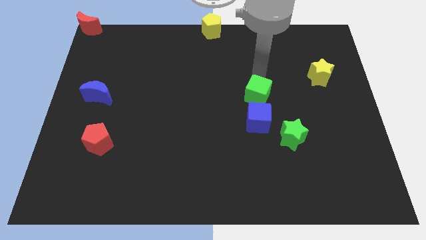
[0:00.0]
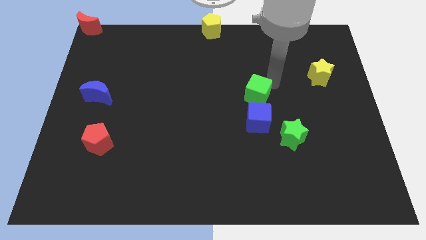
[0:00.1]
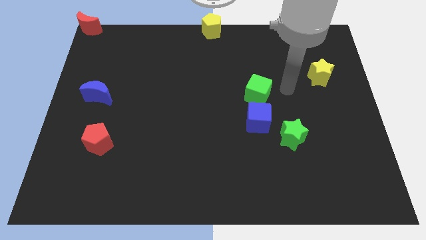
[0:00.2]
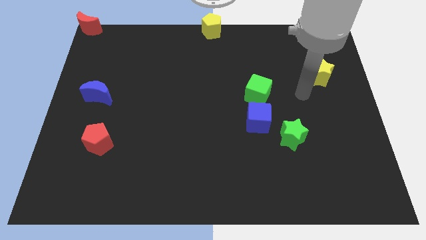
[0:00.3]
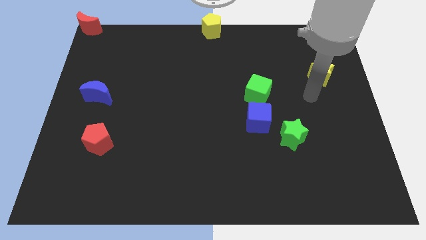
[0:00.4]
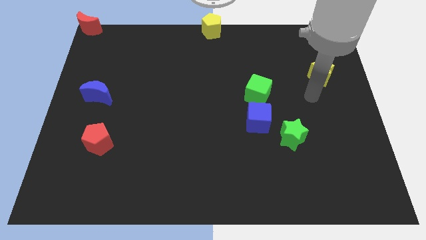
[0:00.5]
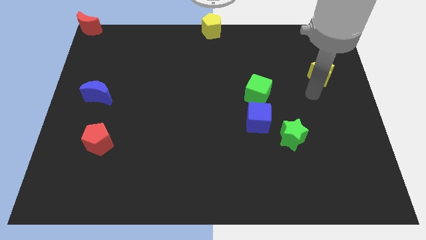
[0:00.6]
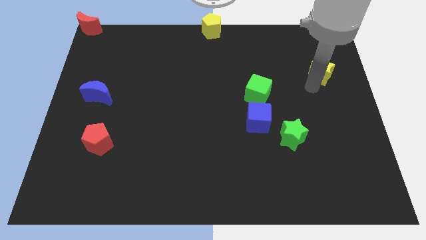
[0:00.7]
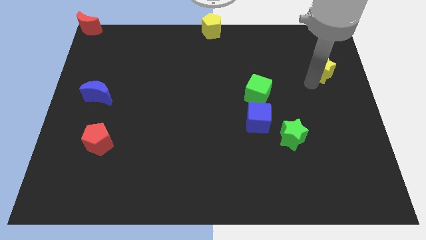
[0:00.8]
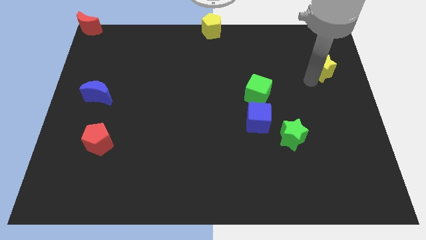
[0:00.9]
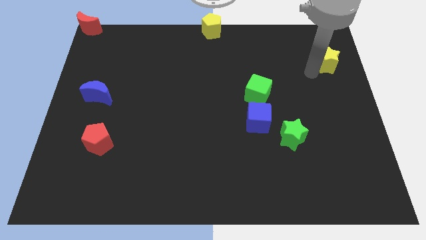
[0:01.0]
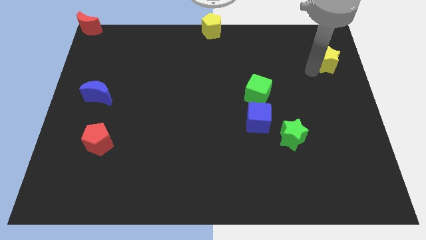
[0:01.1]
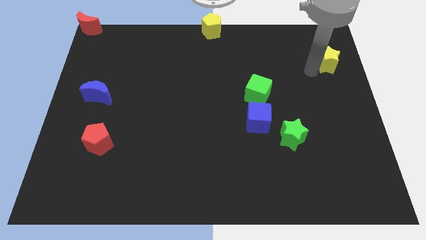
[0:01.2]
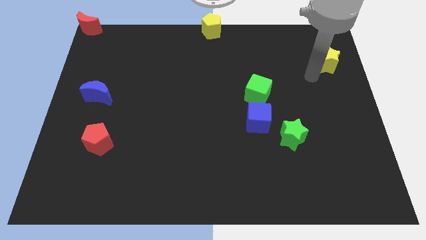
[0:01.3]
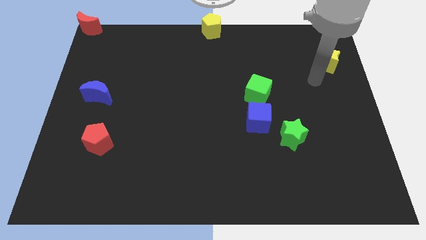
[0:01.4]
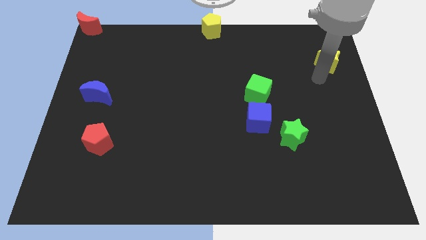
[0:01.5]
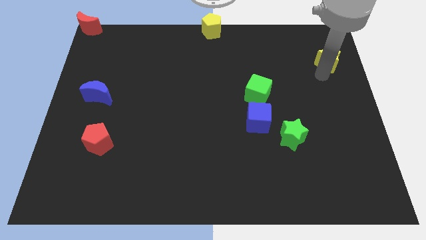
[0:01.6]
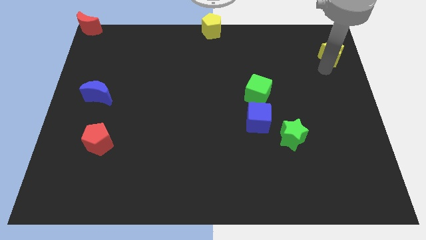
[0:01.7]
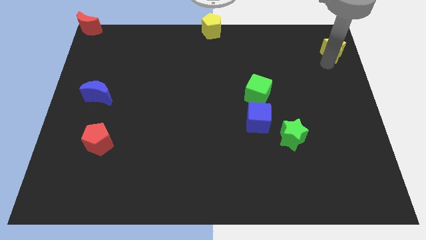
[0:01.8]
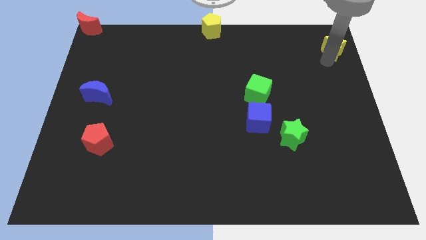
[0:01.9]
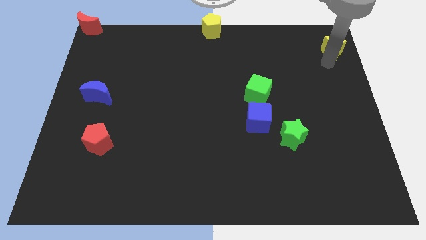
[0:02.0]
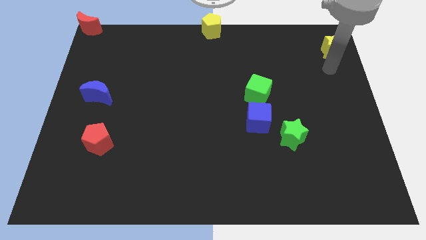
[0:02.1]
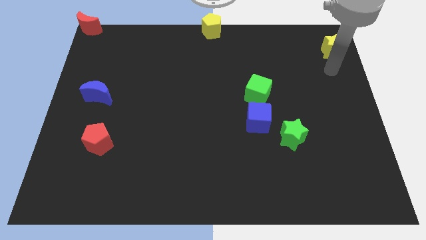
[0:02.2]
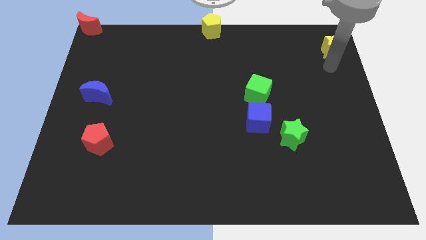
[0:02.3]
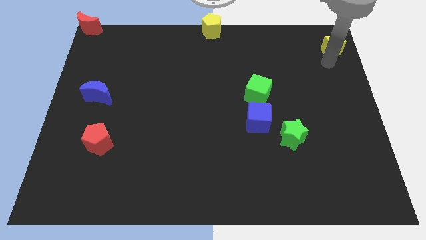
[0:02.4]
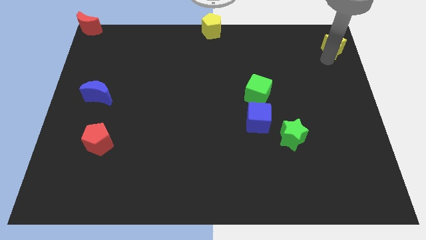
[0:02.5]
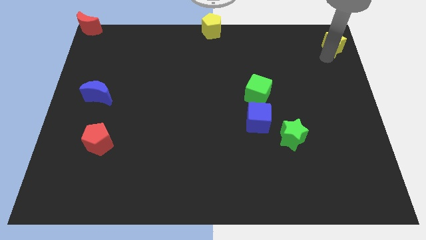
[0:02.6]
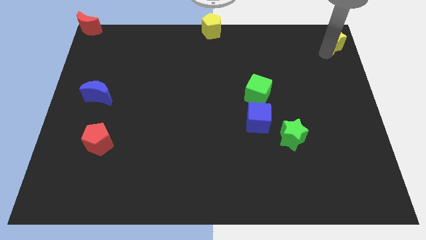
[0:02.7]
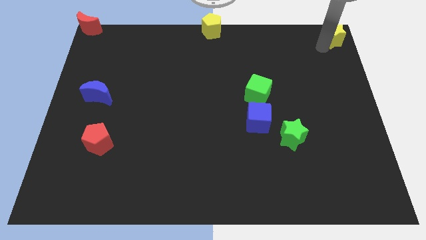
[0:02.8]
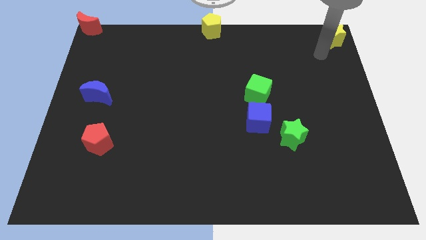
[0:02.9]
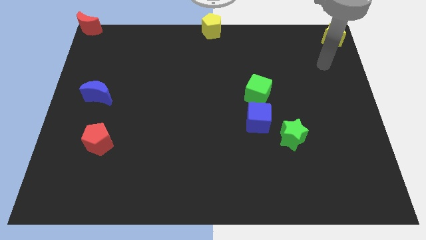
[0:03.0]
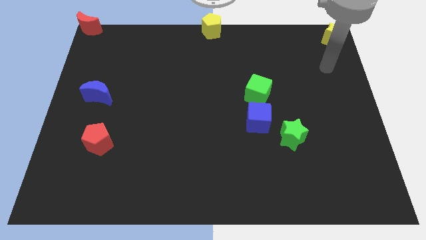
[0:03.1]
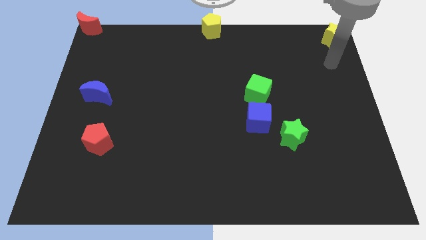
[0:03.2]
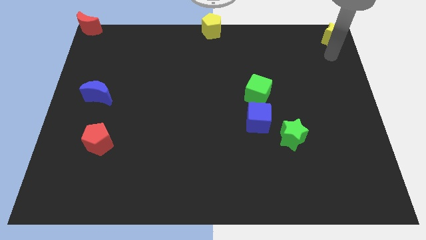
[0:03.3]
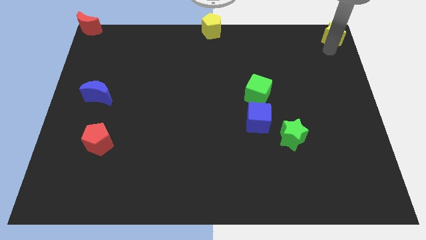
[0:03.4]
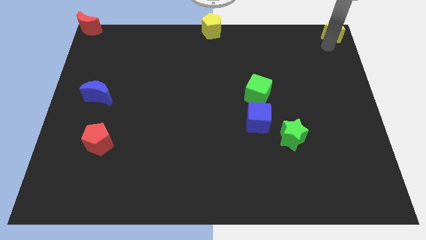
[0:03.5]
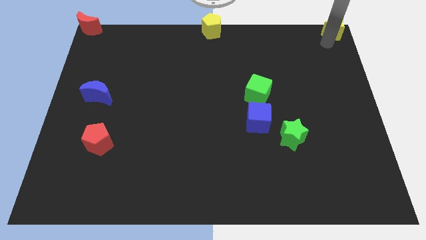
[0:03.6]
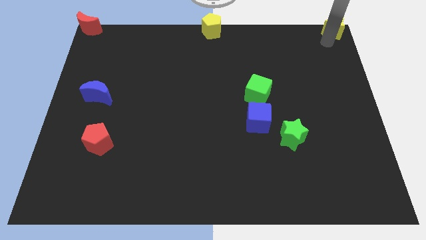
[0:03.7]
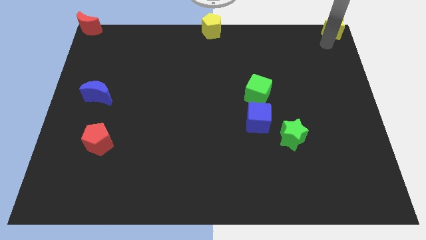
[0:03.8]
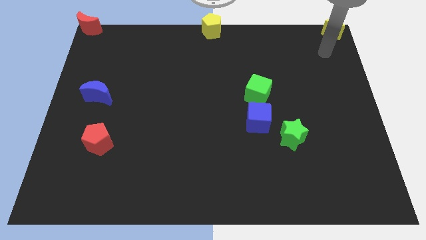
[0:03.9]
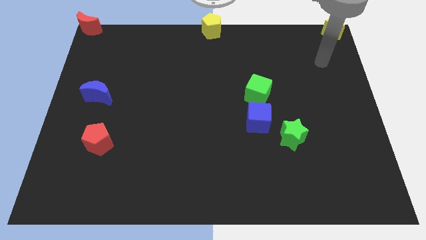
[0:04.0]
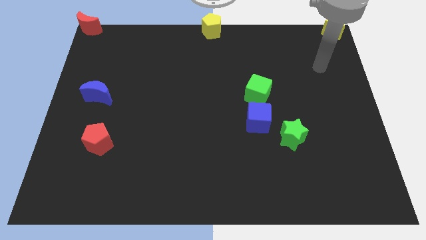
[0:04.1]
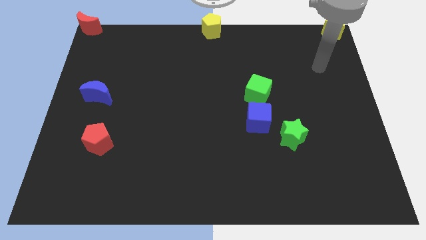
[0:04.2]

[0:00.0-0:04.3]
move the yellow star to the top right corner of the board

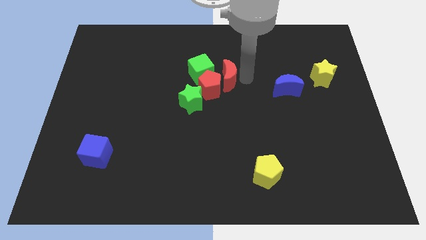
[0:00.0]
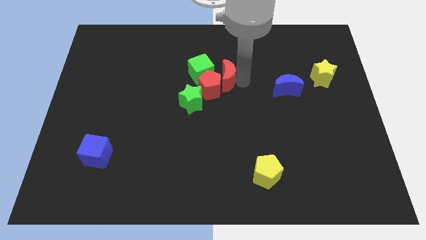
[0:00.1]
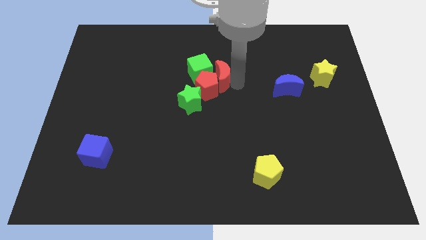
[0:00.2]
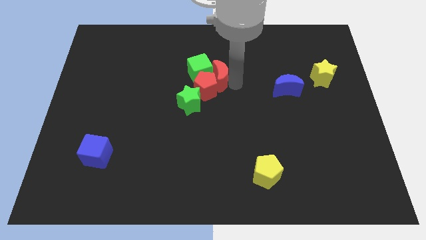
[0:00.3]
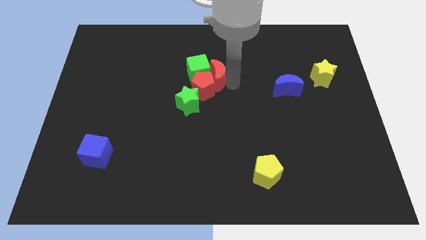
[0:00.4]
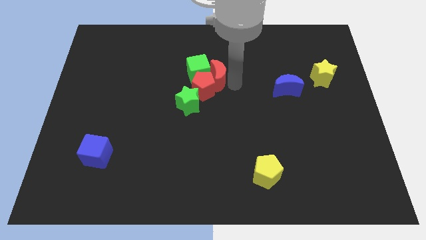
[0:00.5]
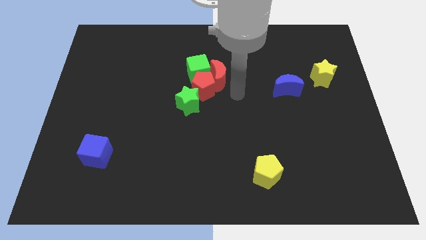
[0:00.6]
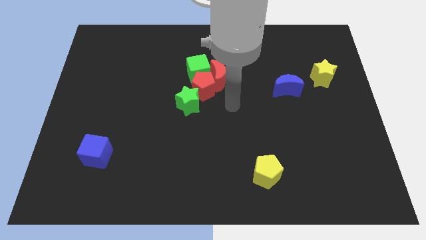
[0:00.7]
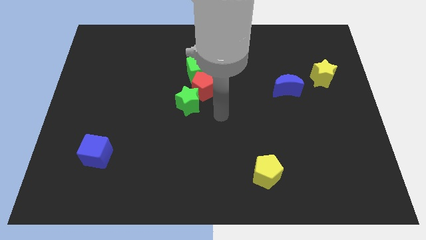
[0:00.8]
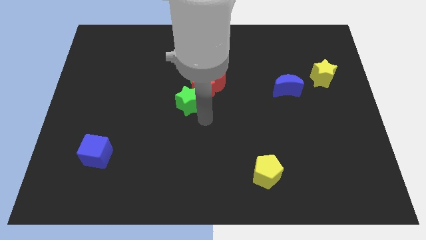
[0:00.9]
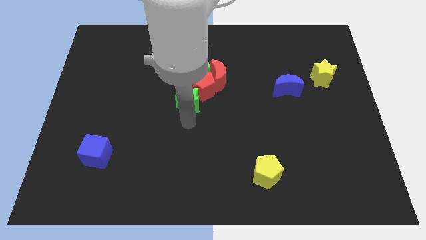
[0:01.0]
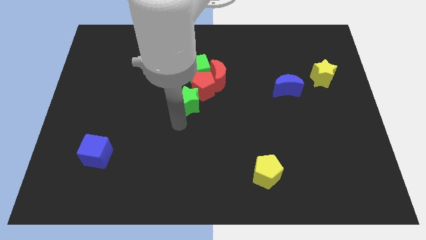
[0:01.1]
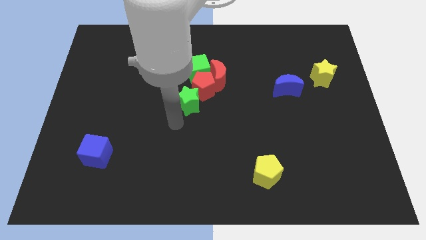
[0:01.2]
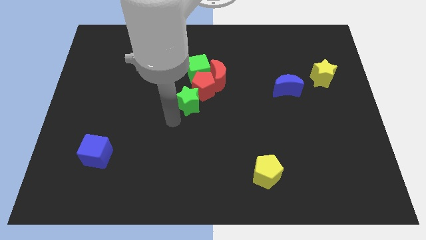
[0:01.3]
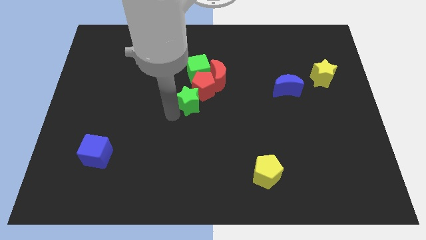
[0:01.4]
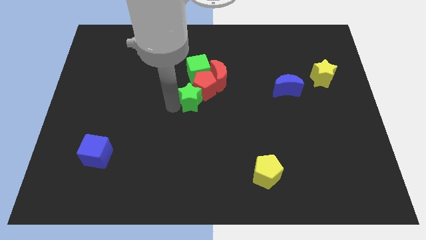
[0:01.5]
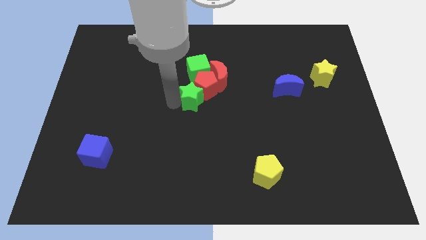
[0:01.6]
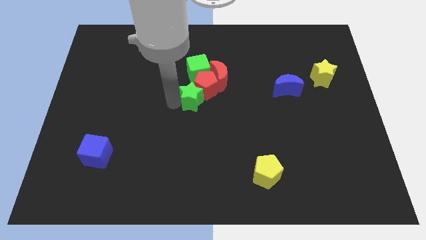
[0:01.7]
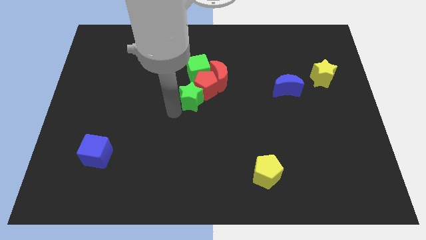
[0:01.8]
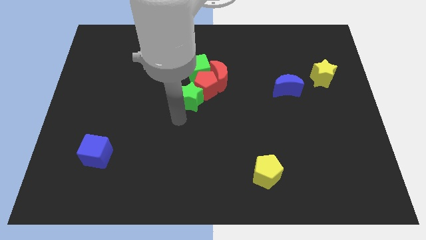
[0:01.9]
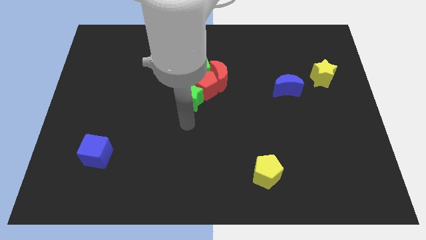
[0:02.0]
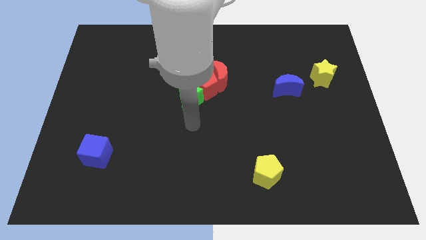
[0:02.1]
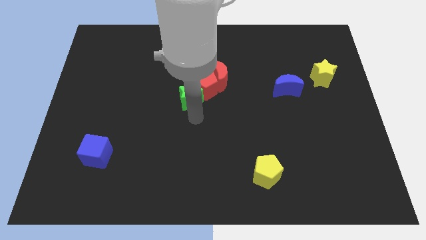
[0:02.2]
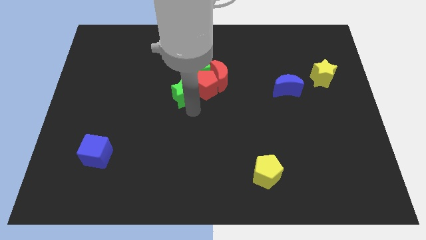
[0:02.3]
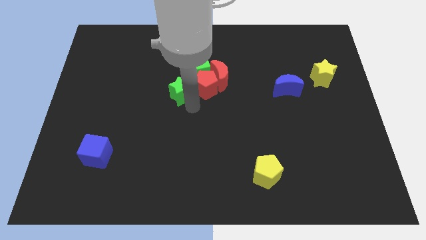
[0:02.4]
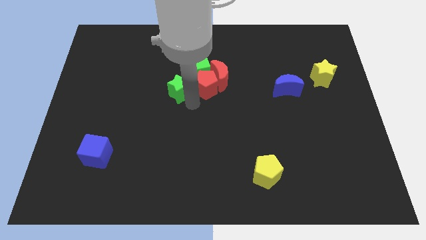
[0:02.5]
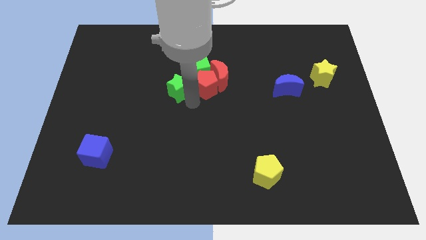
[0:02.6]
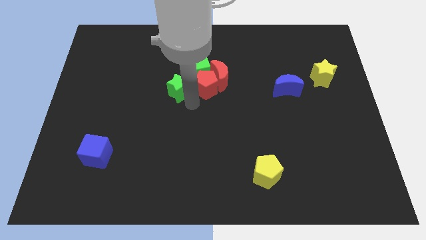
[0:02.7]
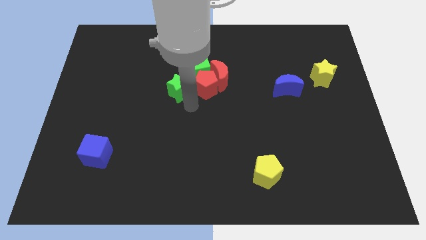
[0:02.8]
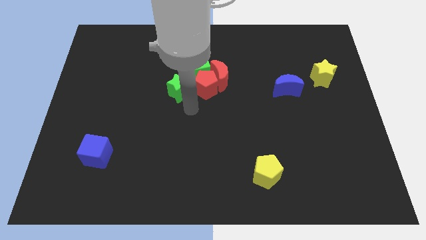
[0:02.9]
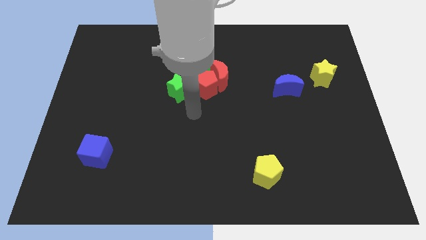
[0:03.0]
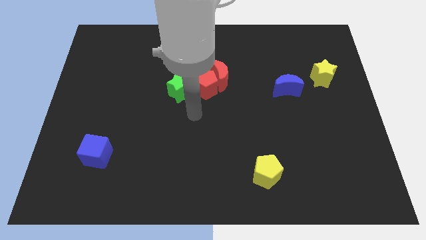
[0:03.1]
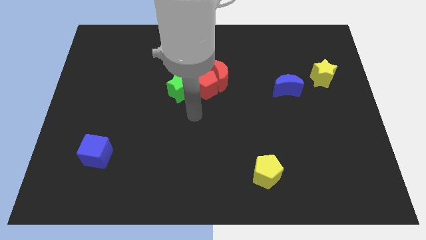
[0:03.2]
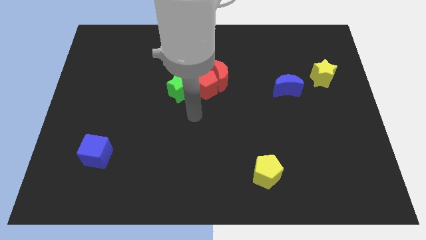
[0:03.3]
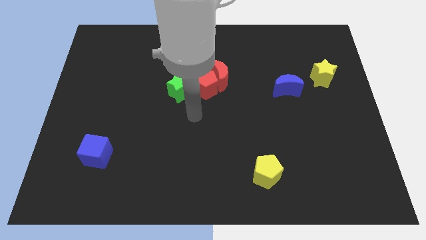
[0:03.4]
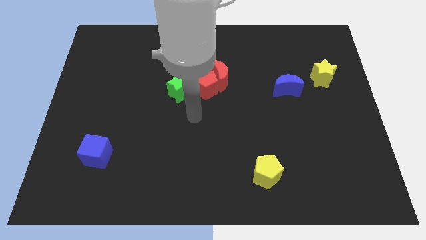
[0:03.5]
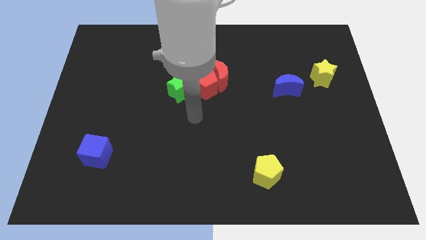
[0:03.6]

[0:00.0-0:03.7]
place the green star left to the red pentagon

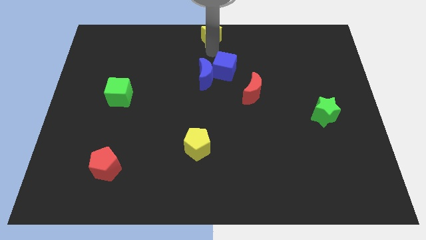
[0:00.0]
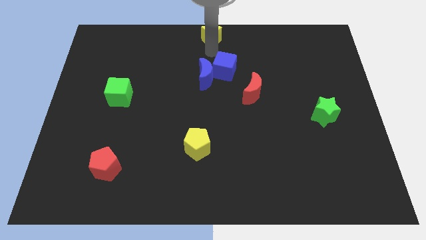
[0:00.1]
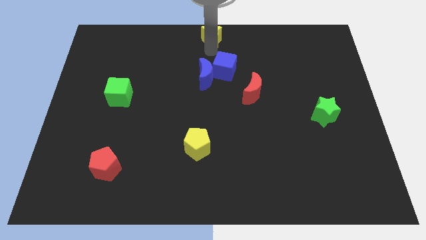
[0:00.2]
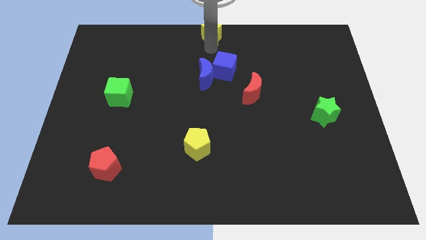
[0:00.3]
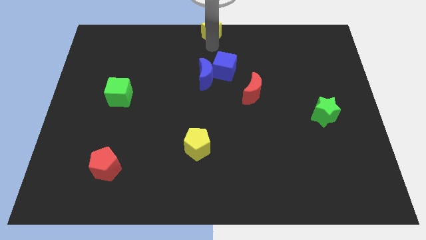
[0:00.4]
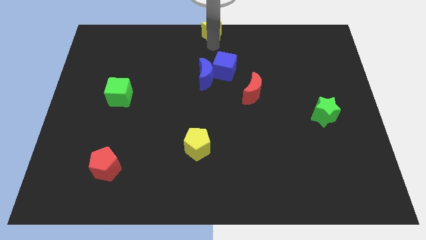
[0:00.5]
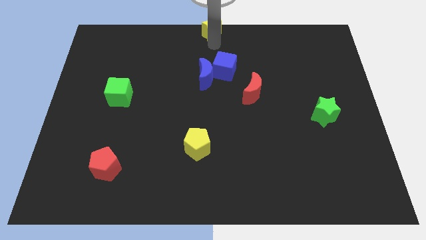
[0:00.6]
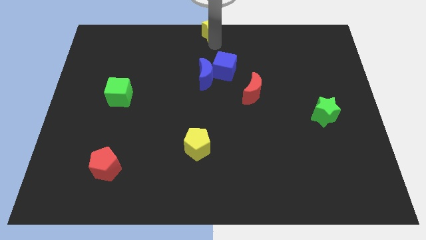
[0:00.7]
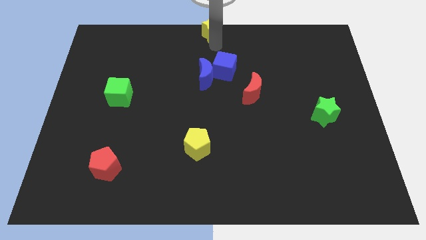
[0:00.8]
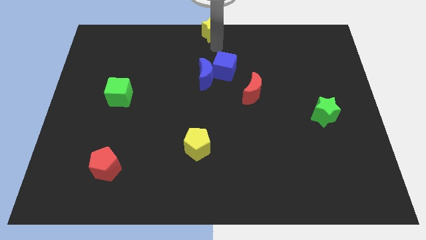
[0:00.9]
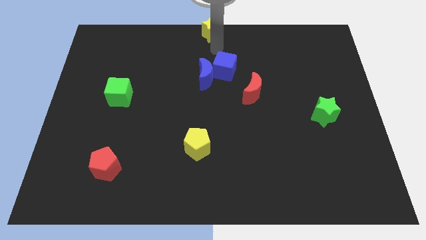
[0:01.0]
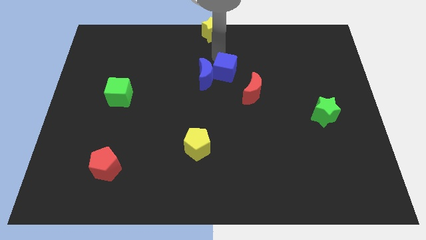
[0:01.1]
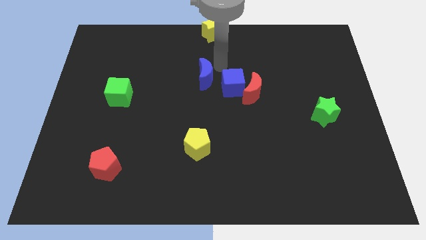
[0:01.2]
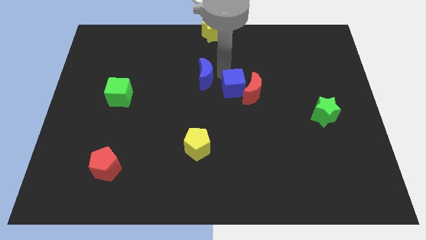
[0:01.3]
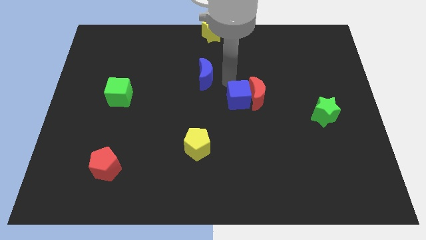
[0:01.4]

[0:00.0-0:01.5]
separate the blue cube from the blue crescent
